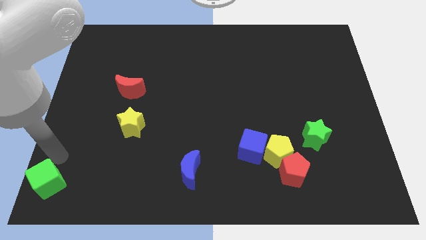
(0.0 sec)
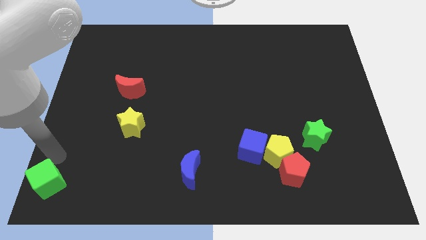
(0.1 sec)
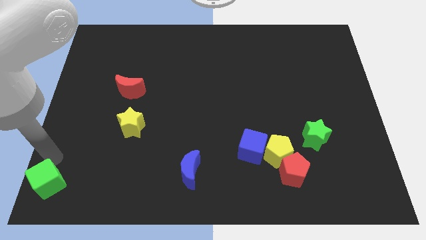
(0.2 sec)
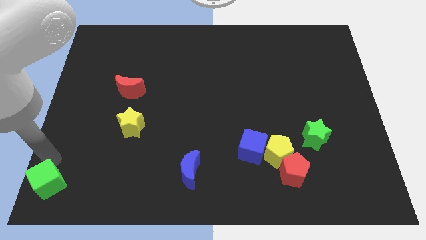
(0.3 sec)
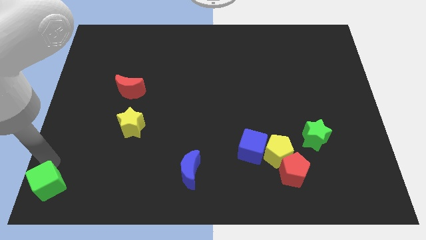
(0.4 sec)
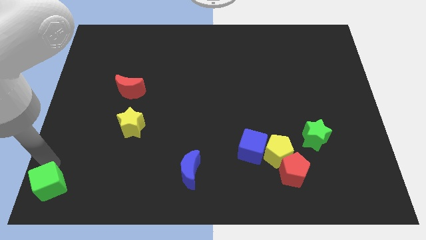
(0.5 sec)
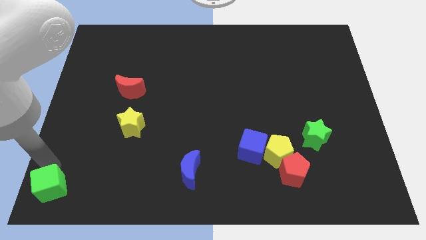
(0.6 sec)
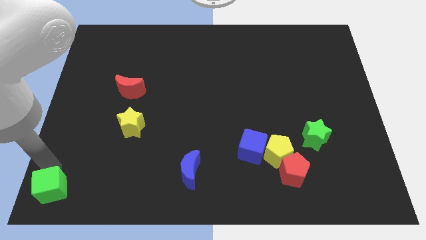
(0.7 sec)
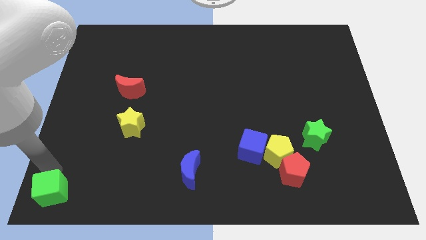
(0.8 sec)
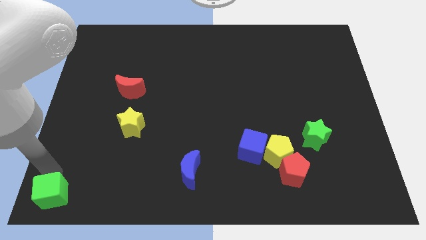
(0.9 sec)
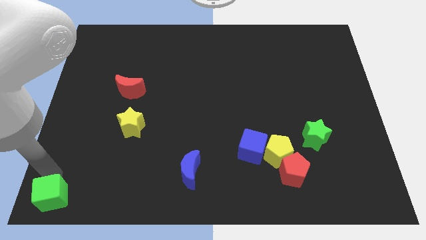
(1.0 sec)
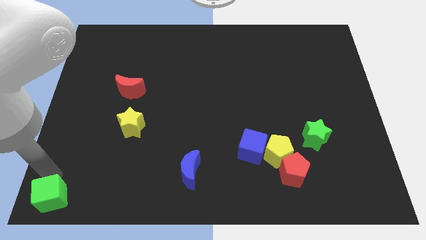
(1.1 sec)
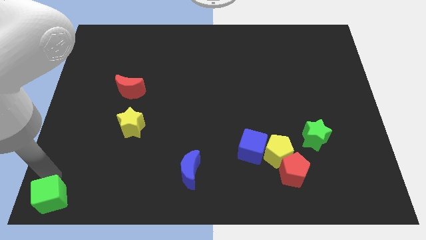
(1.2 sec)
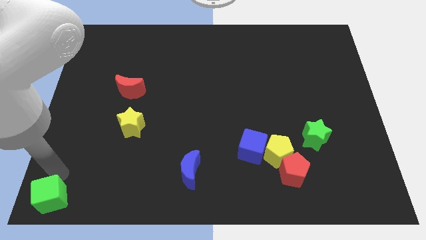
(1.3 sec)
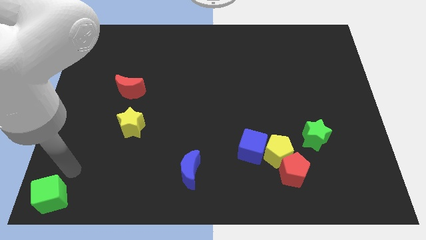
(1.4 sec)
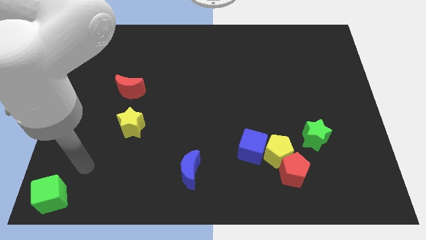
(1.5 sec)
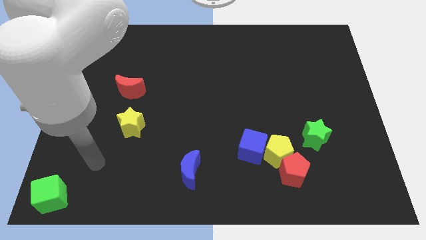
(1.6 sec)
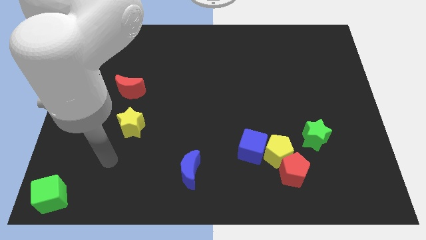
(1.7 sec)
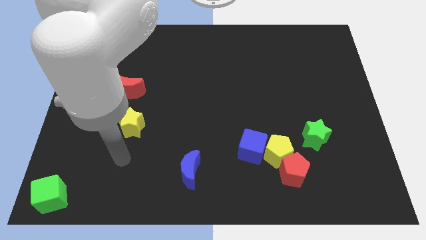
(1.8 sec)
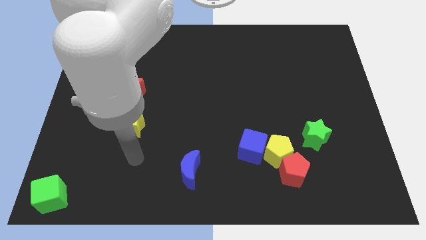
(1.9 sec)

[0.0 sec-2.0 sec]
move the arm away from the green cube

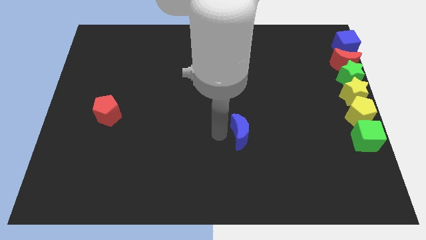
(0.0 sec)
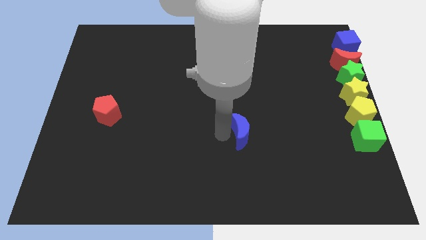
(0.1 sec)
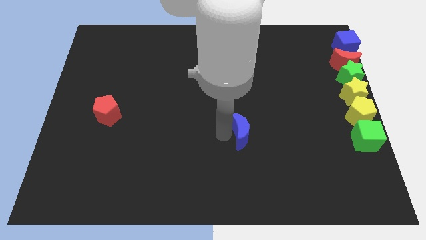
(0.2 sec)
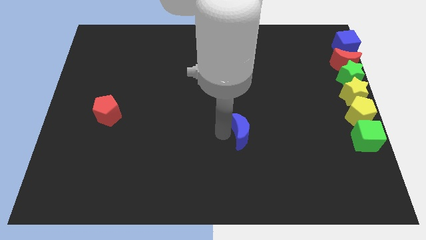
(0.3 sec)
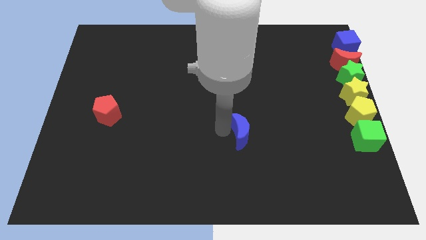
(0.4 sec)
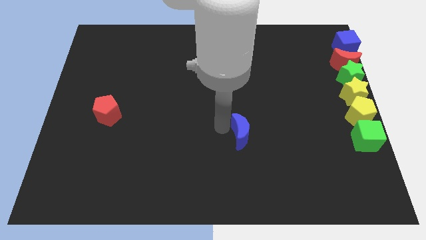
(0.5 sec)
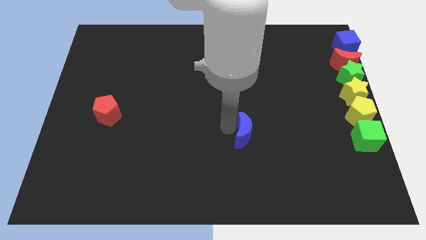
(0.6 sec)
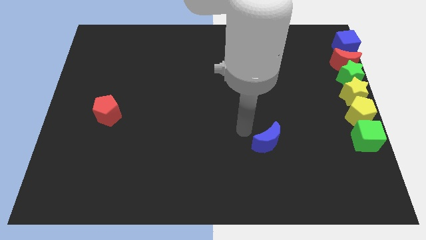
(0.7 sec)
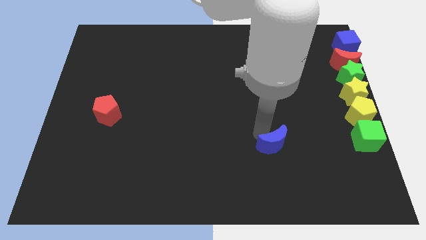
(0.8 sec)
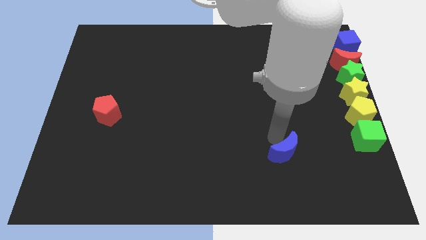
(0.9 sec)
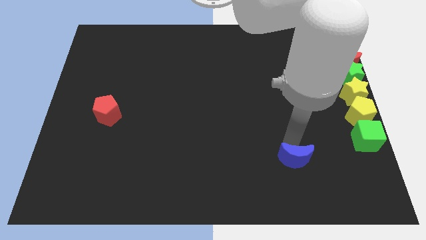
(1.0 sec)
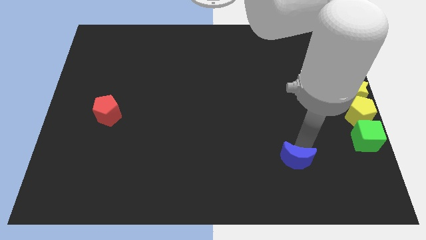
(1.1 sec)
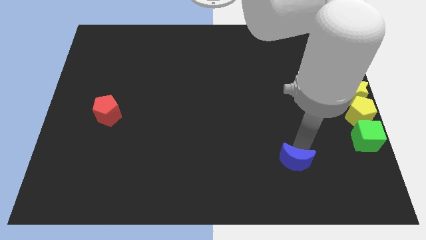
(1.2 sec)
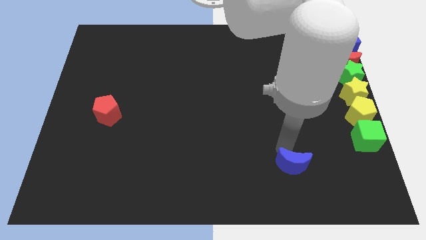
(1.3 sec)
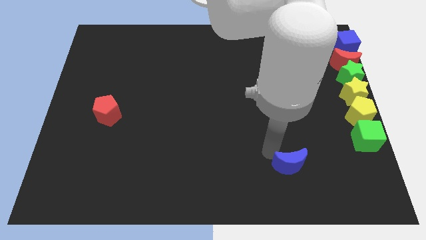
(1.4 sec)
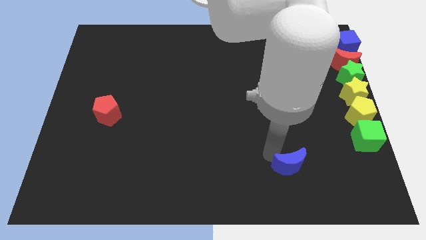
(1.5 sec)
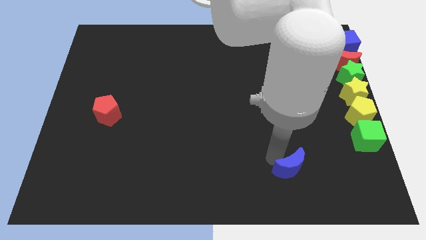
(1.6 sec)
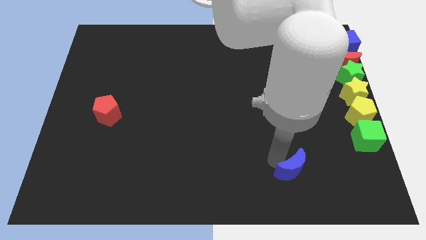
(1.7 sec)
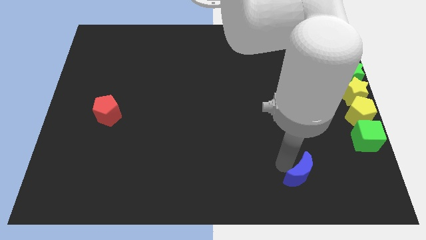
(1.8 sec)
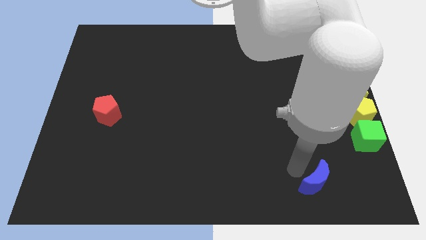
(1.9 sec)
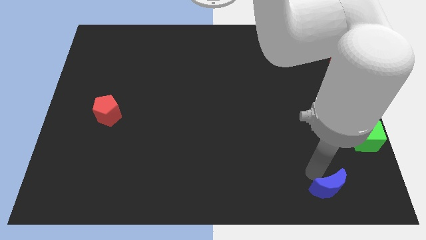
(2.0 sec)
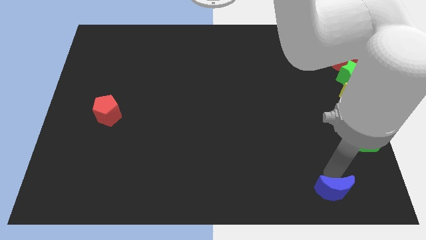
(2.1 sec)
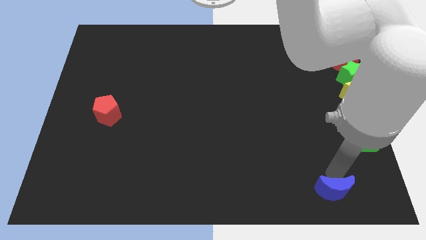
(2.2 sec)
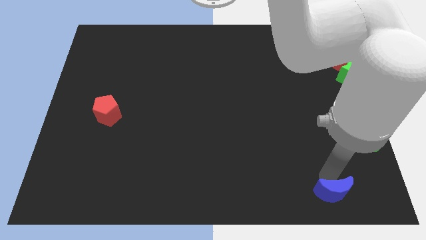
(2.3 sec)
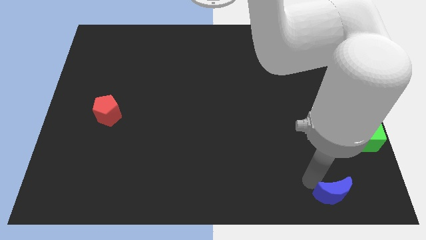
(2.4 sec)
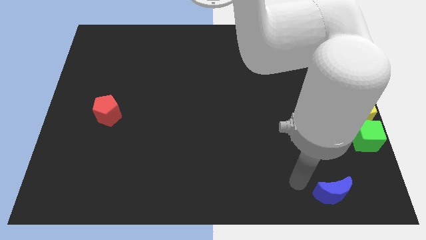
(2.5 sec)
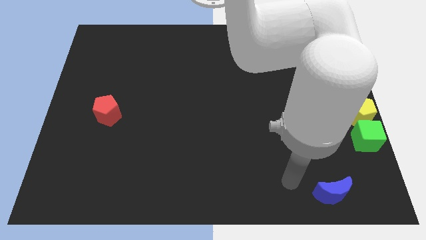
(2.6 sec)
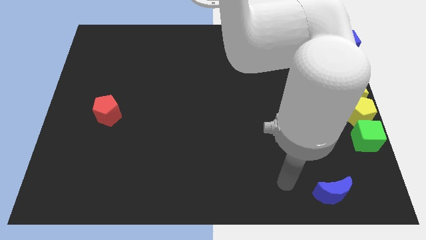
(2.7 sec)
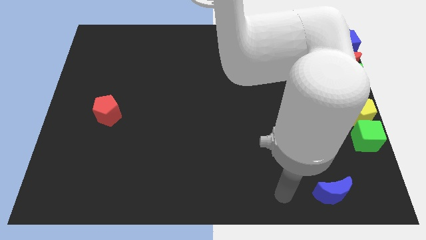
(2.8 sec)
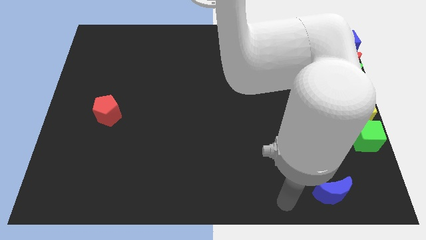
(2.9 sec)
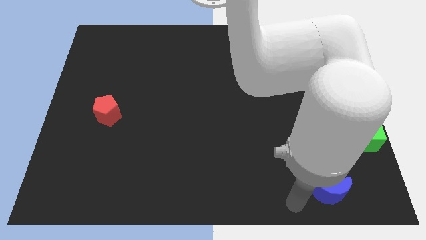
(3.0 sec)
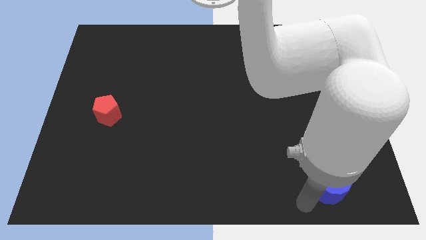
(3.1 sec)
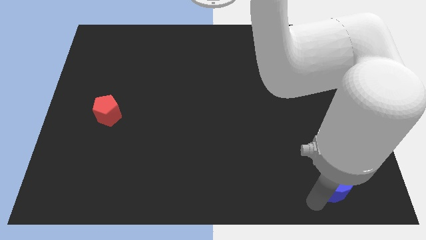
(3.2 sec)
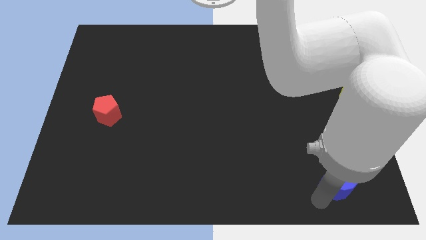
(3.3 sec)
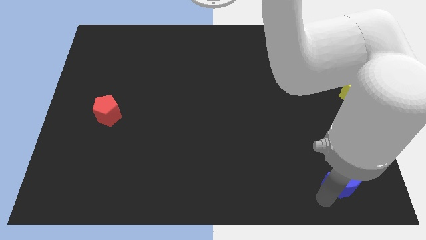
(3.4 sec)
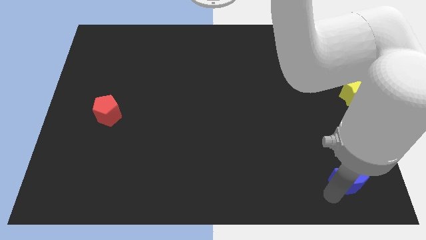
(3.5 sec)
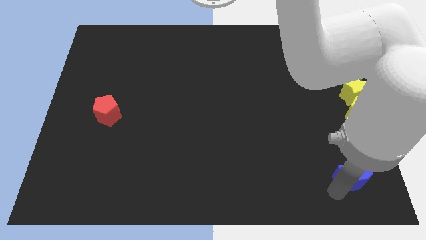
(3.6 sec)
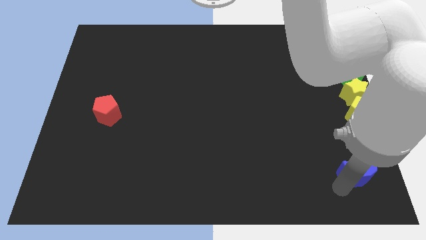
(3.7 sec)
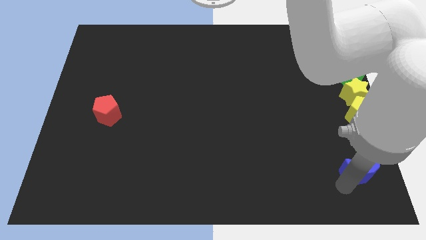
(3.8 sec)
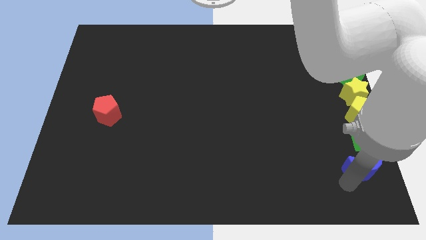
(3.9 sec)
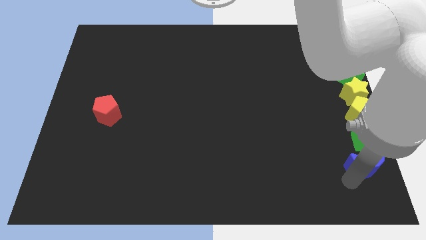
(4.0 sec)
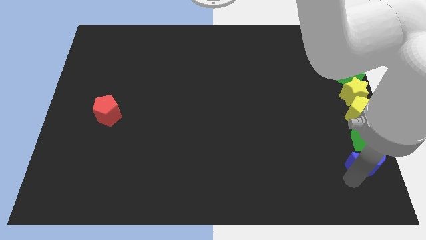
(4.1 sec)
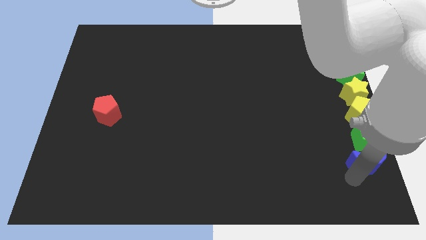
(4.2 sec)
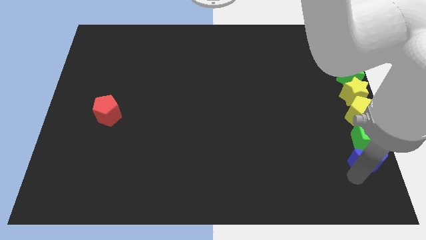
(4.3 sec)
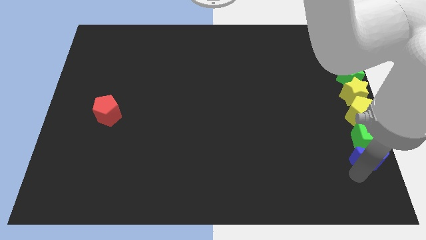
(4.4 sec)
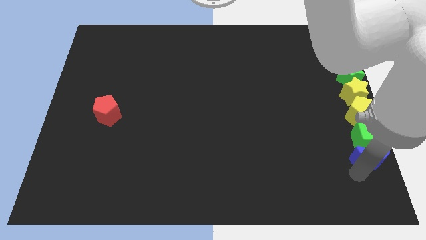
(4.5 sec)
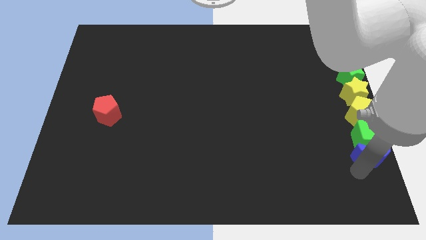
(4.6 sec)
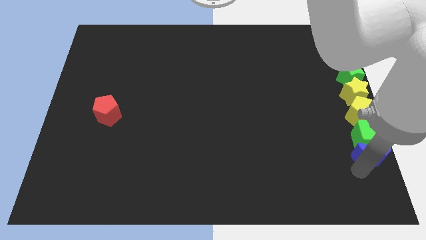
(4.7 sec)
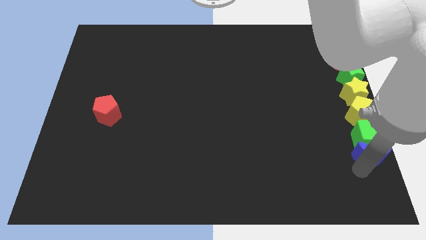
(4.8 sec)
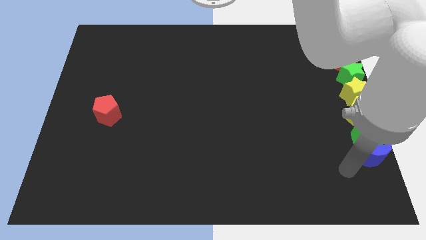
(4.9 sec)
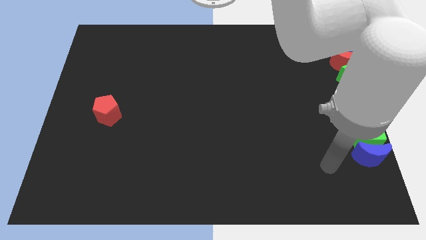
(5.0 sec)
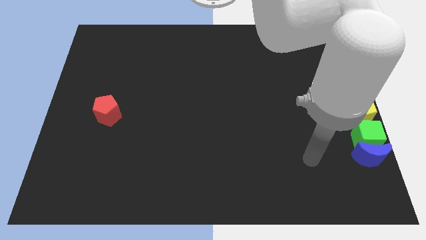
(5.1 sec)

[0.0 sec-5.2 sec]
push the blue crescent below to the green cube

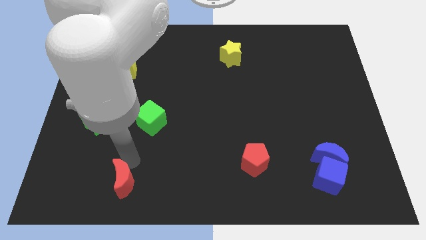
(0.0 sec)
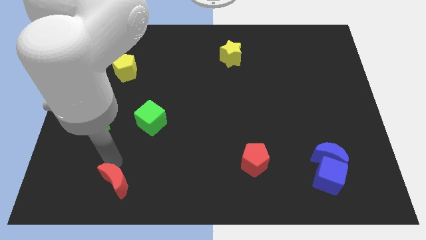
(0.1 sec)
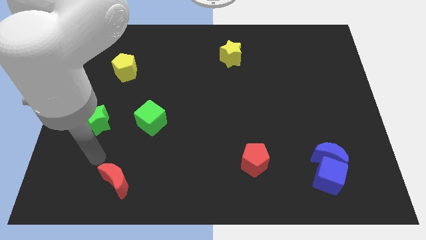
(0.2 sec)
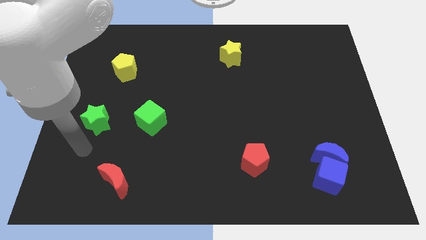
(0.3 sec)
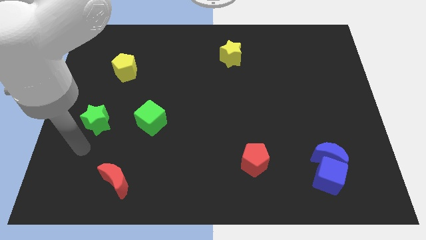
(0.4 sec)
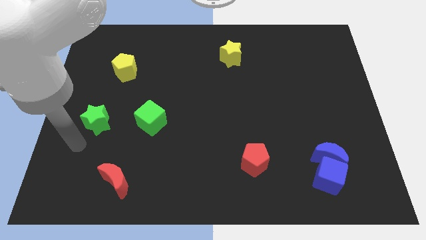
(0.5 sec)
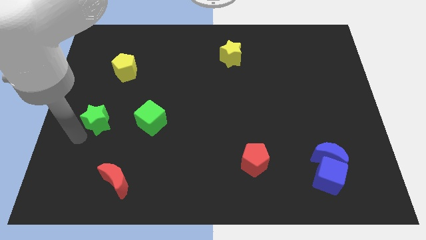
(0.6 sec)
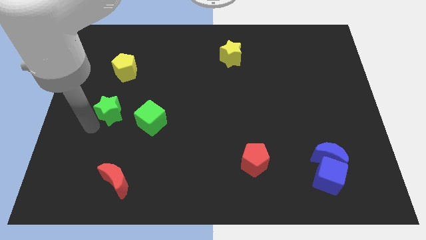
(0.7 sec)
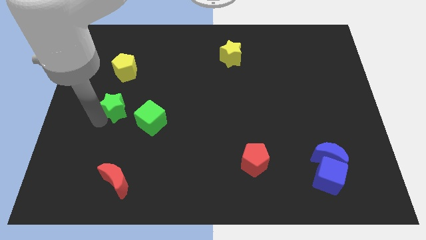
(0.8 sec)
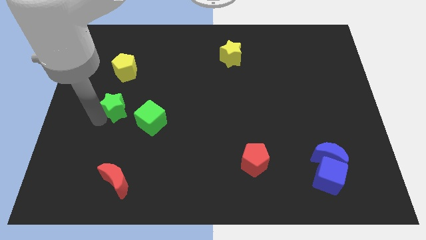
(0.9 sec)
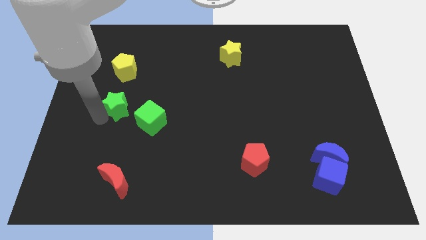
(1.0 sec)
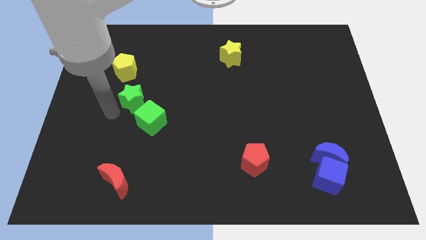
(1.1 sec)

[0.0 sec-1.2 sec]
move the green star to the top left of the green cube

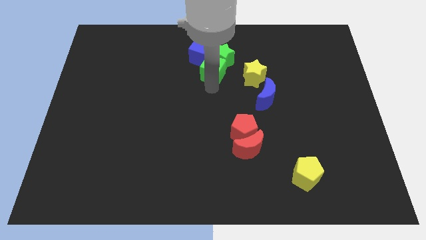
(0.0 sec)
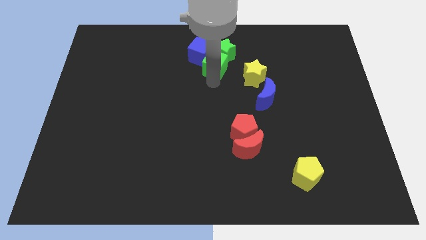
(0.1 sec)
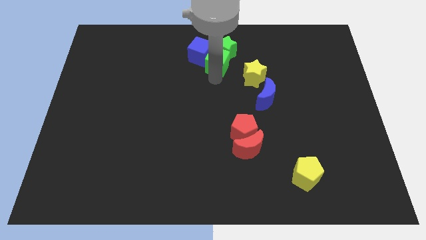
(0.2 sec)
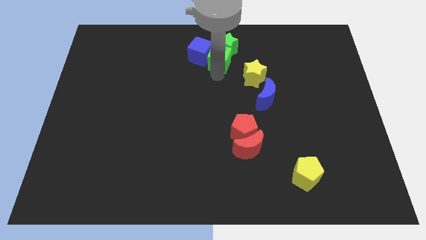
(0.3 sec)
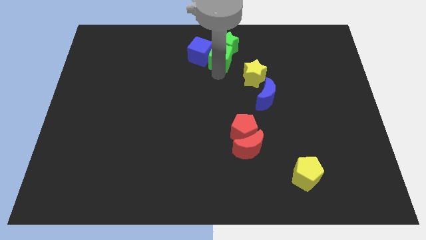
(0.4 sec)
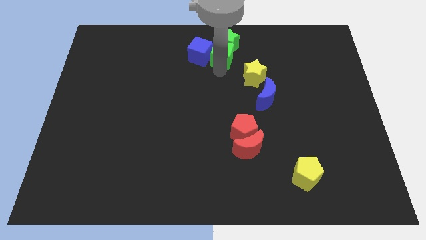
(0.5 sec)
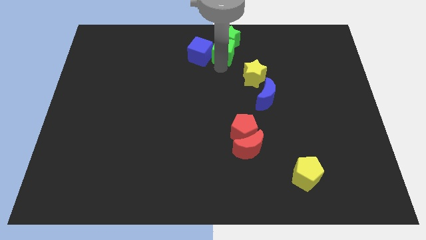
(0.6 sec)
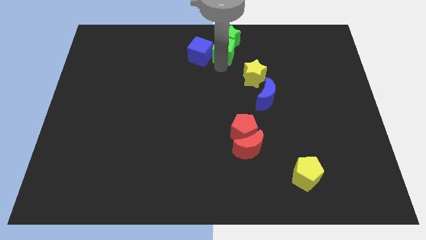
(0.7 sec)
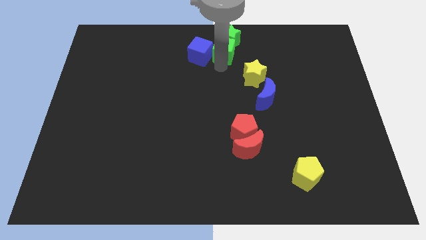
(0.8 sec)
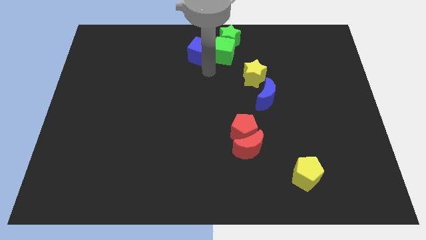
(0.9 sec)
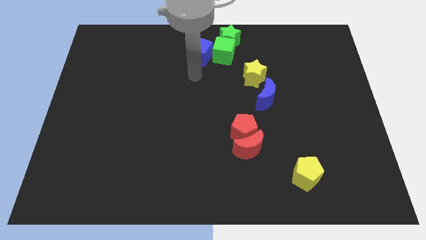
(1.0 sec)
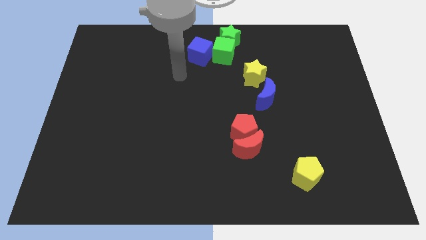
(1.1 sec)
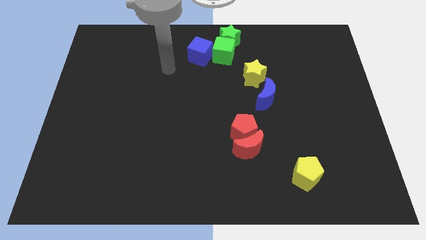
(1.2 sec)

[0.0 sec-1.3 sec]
push the green blocks to the top side of the board
